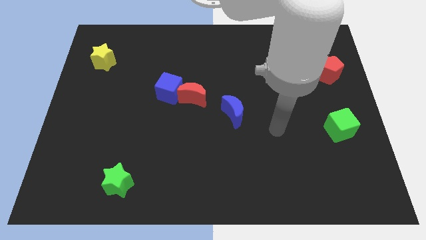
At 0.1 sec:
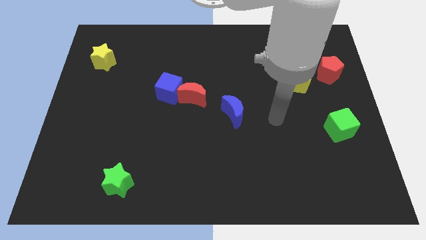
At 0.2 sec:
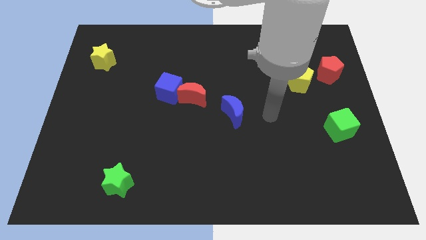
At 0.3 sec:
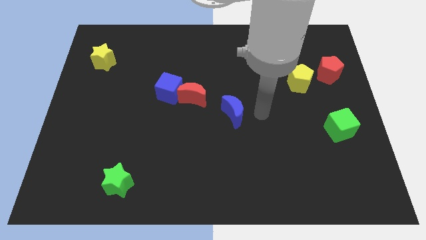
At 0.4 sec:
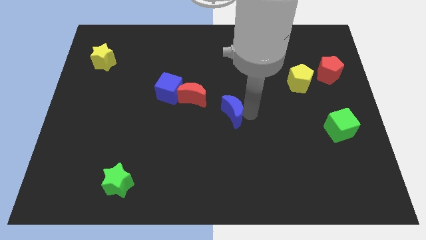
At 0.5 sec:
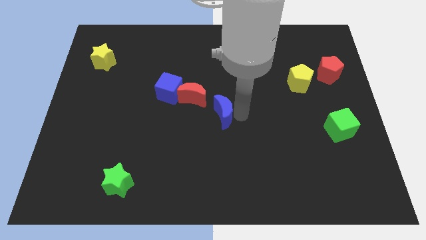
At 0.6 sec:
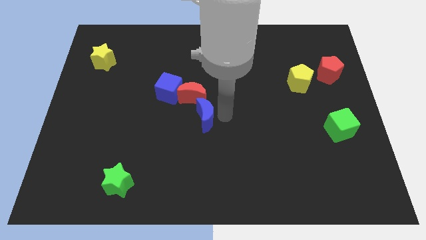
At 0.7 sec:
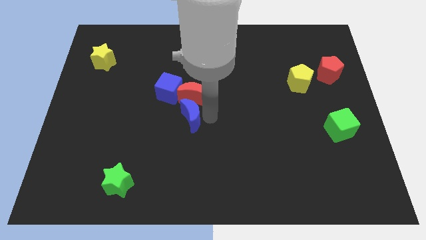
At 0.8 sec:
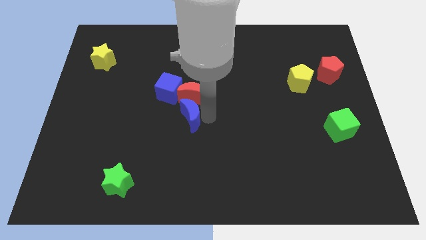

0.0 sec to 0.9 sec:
move blue moon to the bottom of the red moon

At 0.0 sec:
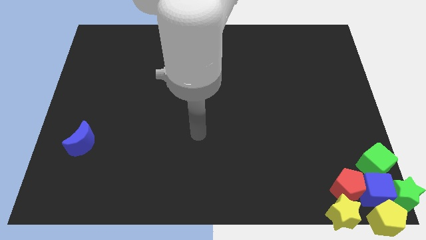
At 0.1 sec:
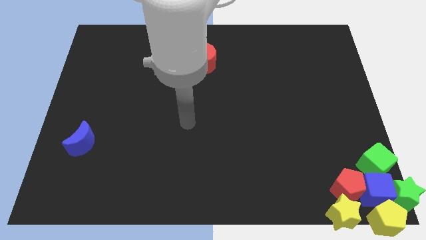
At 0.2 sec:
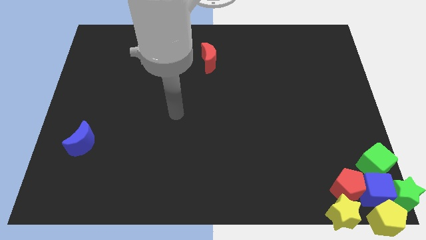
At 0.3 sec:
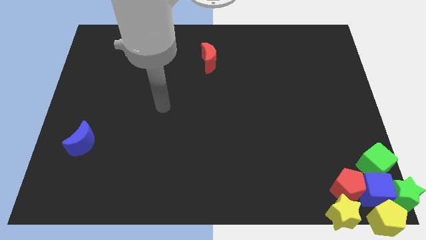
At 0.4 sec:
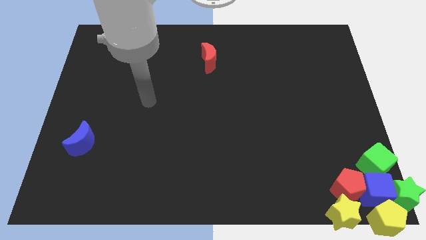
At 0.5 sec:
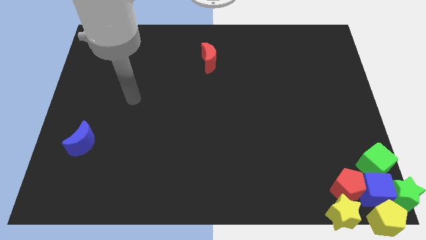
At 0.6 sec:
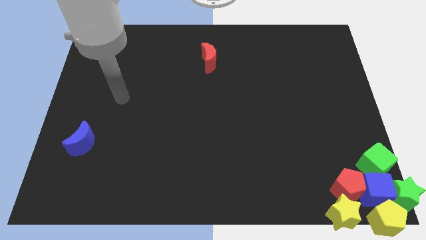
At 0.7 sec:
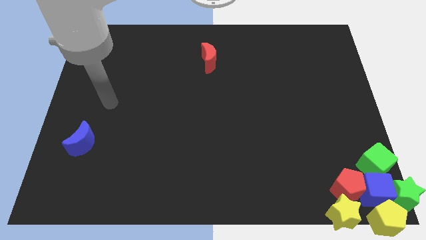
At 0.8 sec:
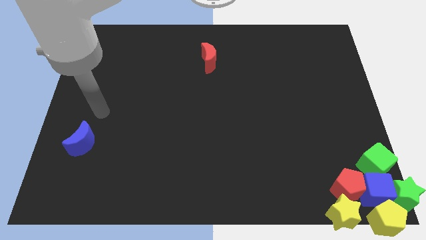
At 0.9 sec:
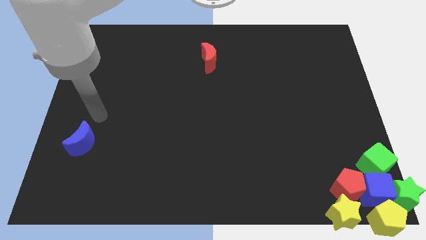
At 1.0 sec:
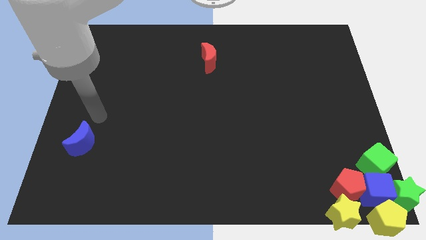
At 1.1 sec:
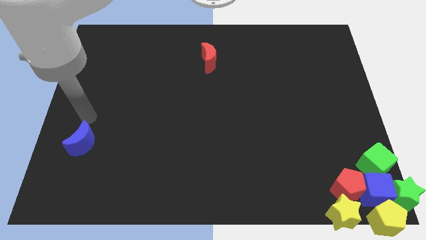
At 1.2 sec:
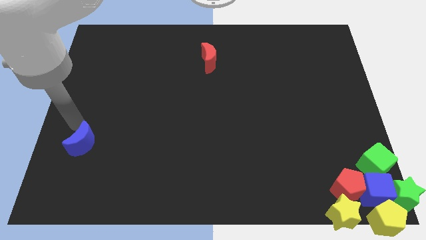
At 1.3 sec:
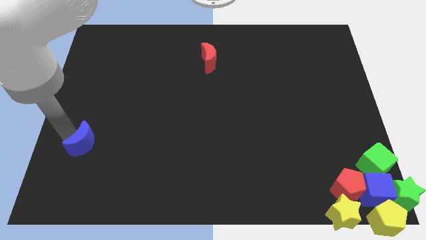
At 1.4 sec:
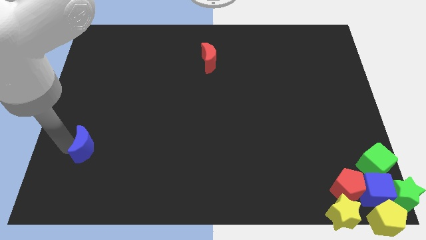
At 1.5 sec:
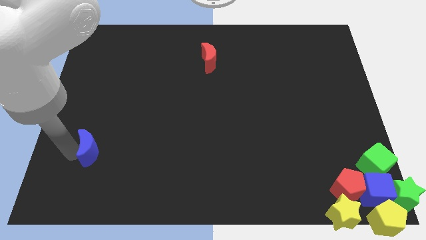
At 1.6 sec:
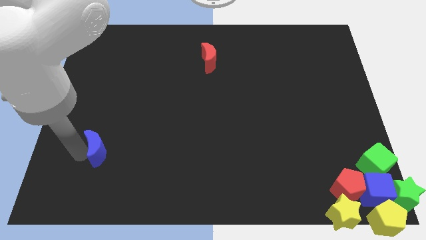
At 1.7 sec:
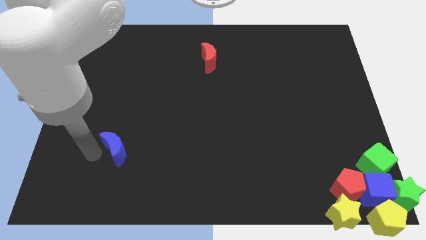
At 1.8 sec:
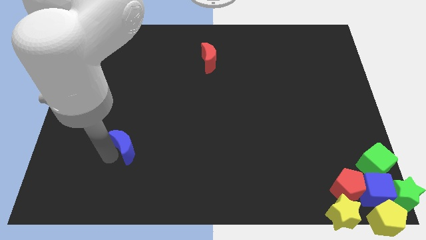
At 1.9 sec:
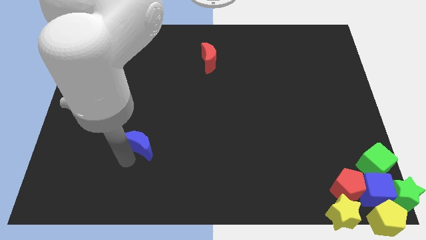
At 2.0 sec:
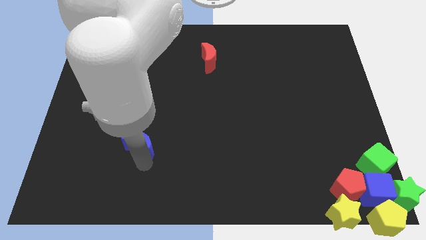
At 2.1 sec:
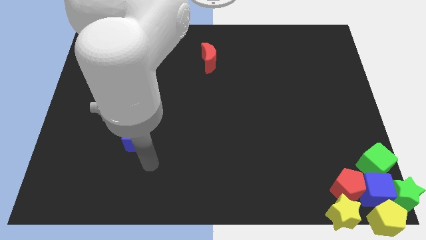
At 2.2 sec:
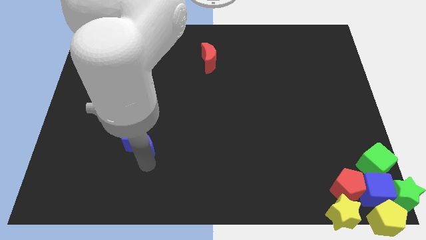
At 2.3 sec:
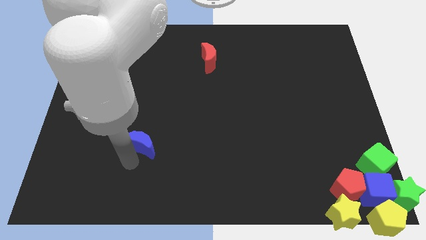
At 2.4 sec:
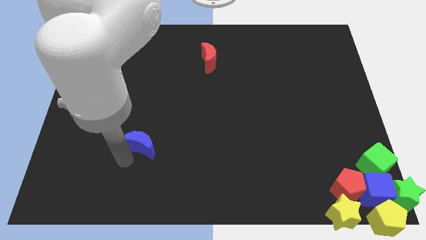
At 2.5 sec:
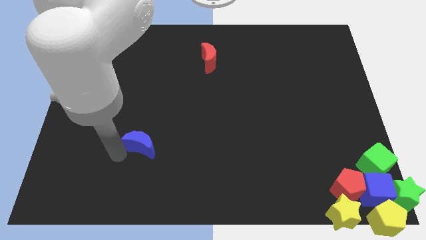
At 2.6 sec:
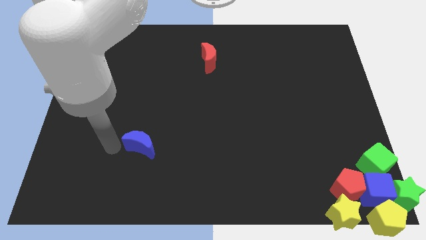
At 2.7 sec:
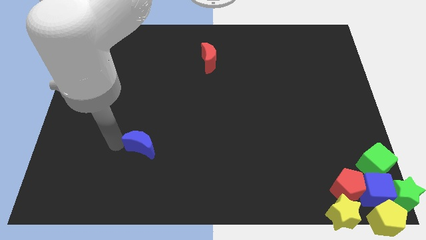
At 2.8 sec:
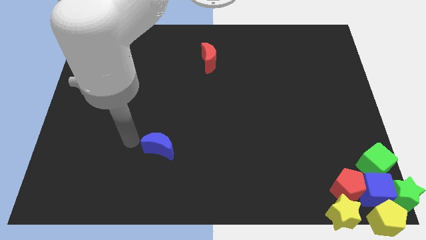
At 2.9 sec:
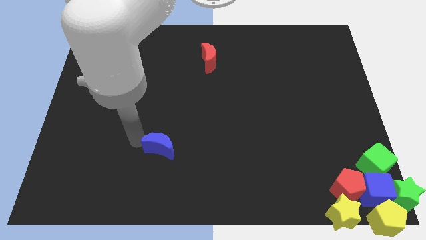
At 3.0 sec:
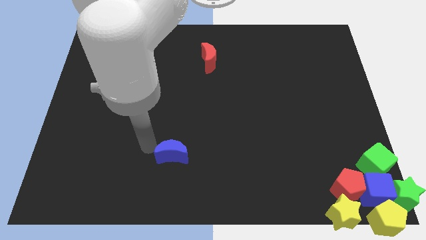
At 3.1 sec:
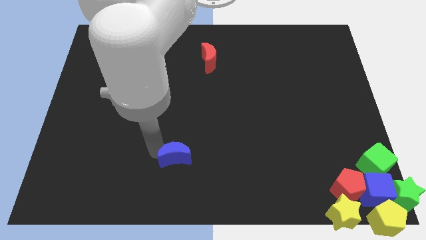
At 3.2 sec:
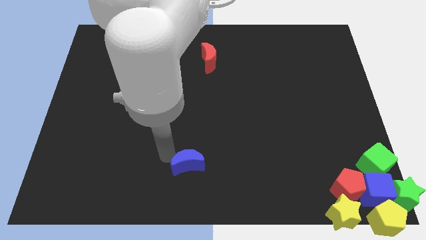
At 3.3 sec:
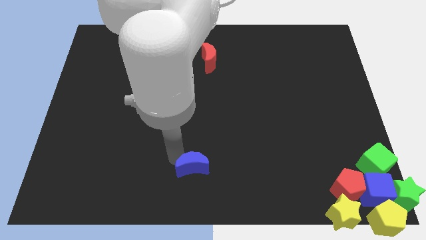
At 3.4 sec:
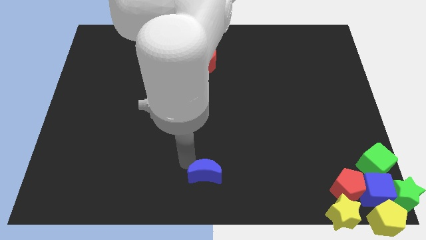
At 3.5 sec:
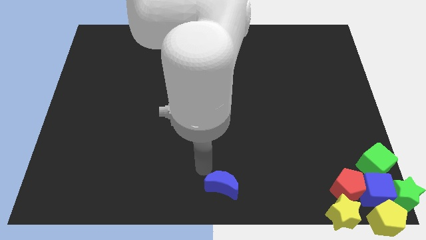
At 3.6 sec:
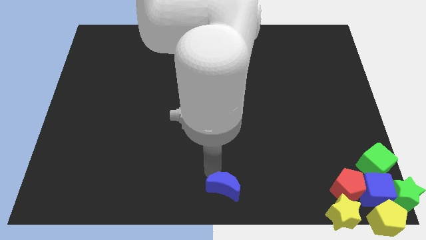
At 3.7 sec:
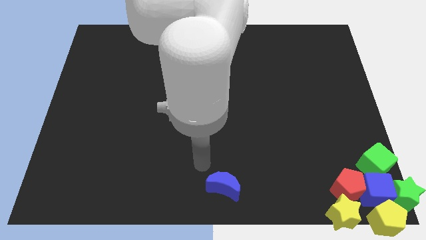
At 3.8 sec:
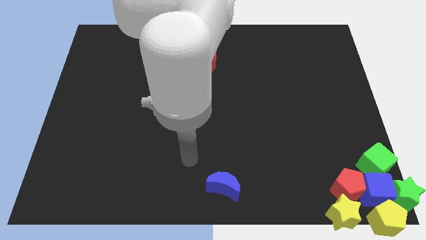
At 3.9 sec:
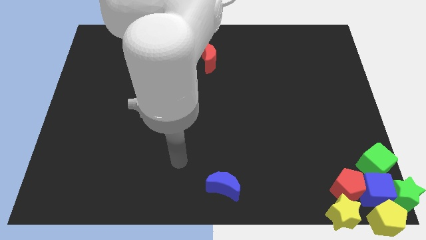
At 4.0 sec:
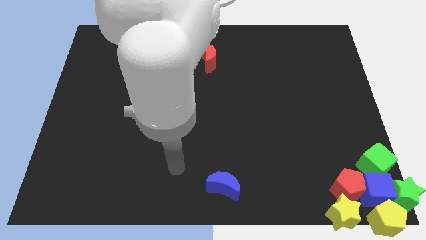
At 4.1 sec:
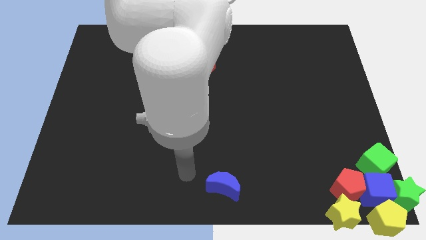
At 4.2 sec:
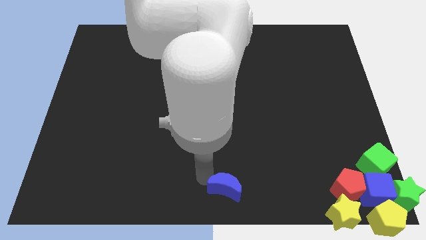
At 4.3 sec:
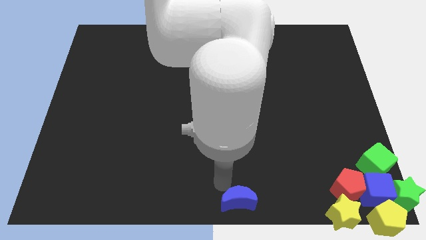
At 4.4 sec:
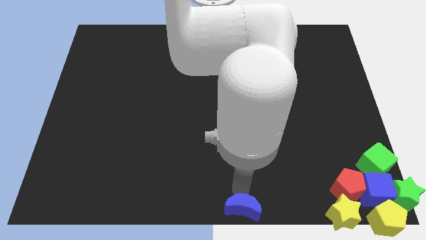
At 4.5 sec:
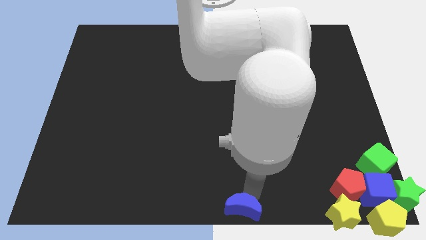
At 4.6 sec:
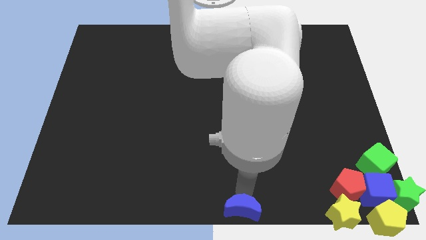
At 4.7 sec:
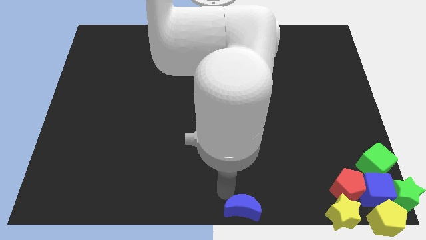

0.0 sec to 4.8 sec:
push the blue moon towards the bottom center

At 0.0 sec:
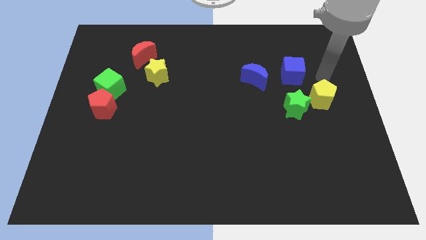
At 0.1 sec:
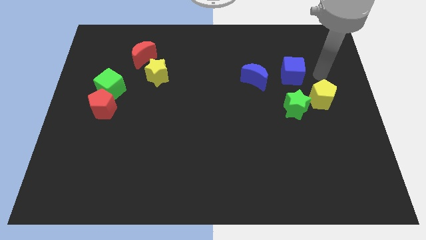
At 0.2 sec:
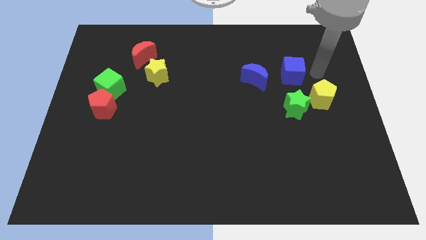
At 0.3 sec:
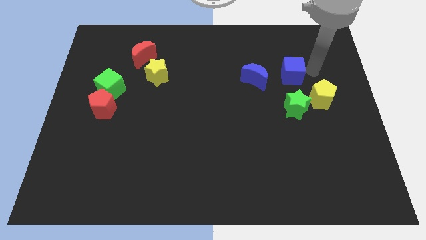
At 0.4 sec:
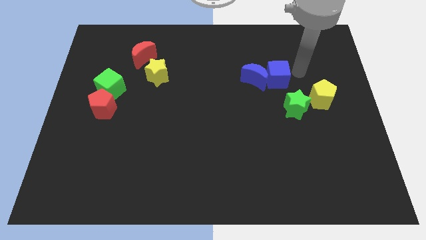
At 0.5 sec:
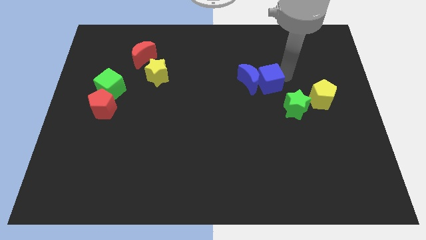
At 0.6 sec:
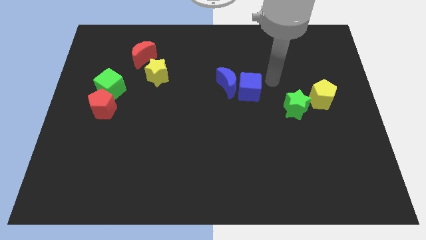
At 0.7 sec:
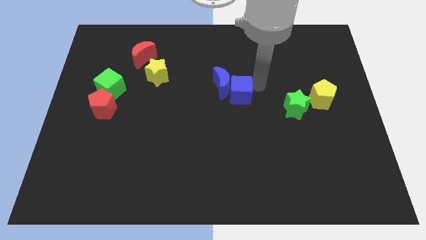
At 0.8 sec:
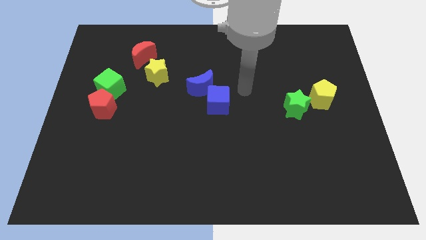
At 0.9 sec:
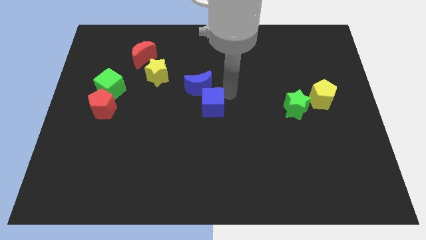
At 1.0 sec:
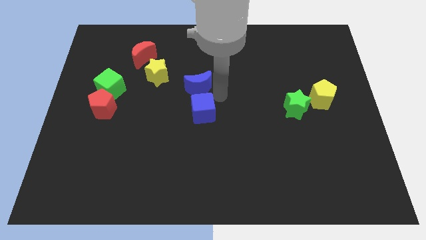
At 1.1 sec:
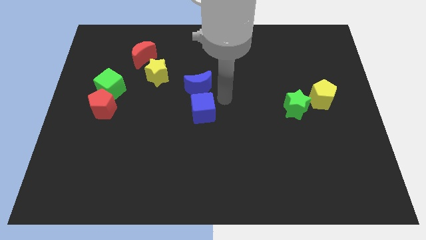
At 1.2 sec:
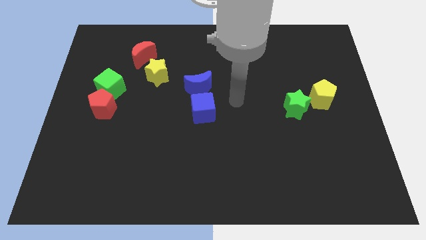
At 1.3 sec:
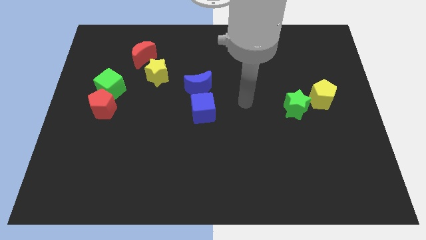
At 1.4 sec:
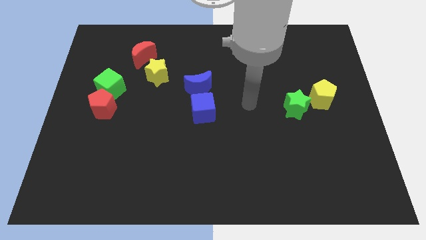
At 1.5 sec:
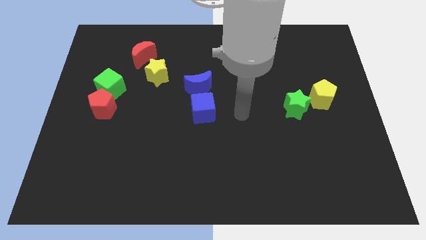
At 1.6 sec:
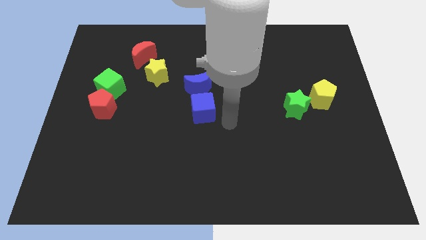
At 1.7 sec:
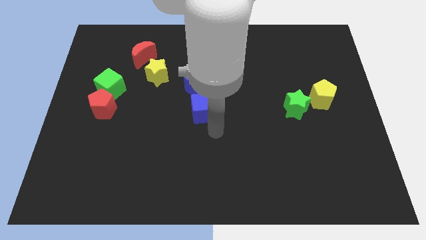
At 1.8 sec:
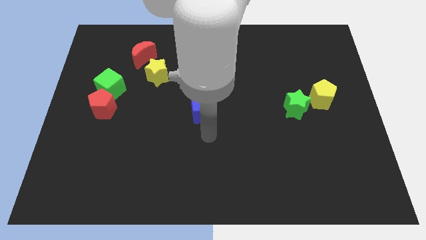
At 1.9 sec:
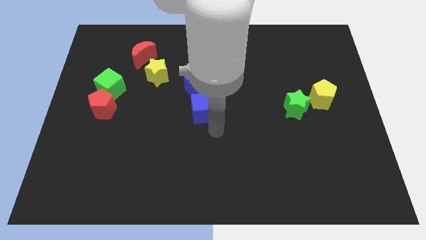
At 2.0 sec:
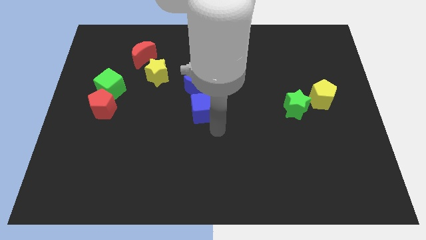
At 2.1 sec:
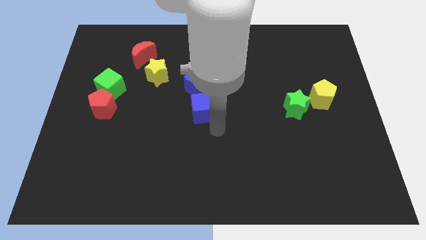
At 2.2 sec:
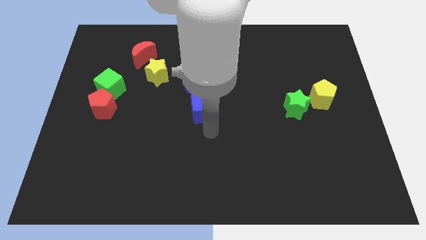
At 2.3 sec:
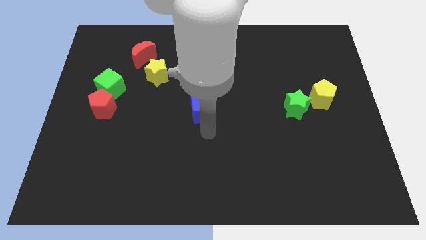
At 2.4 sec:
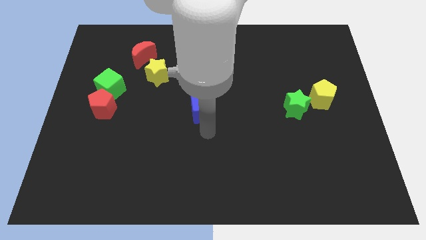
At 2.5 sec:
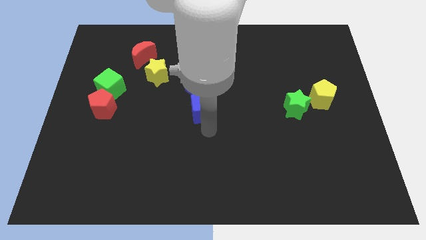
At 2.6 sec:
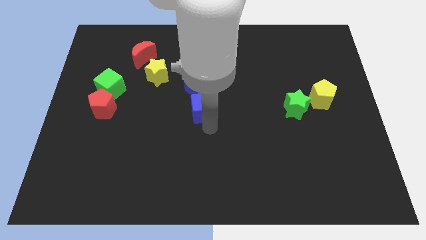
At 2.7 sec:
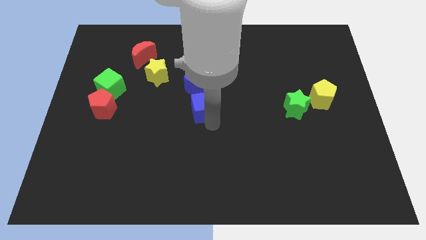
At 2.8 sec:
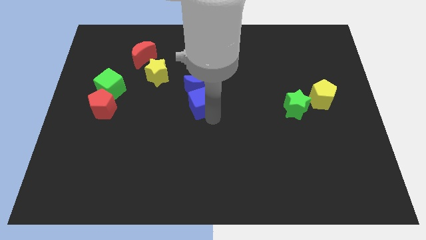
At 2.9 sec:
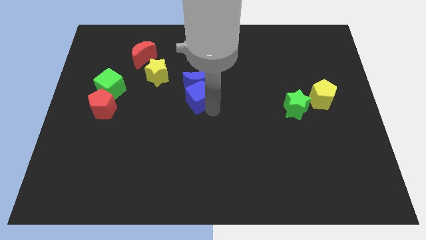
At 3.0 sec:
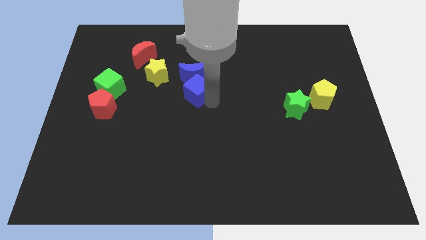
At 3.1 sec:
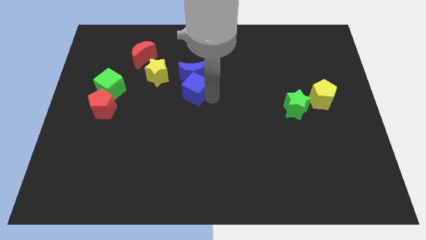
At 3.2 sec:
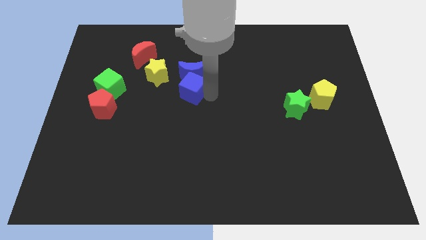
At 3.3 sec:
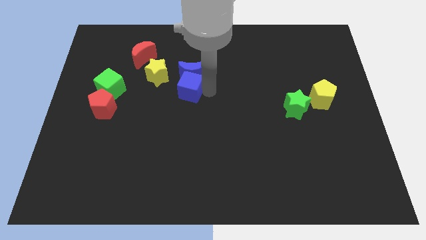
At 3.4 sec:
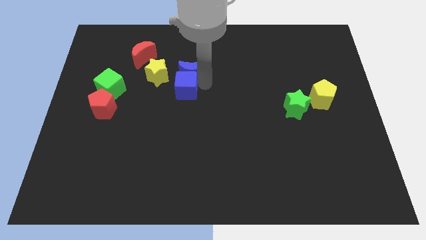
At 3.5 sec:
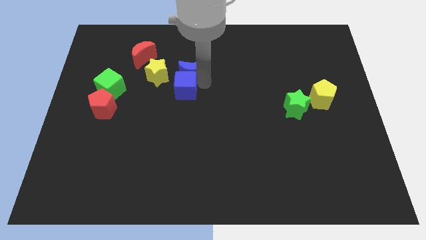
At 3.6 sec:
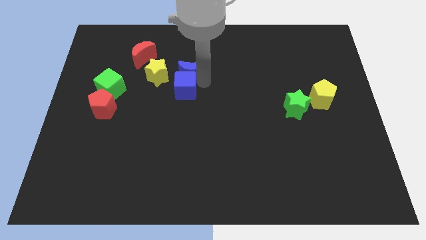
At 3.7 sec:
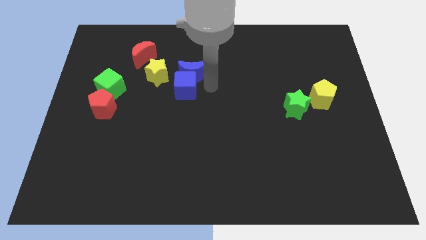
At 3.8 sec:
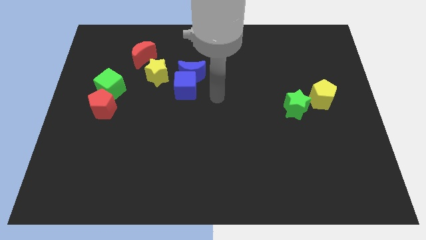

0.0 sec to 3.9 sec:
place the blue blocks right to the yellow star
